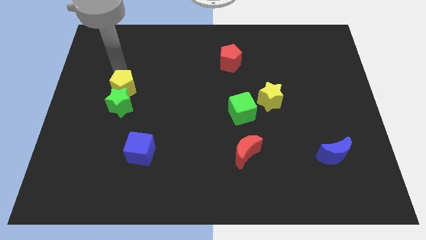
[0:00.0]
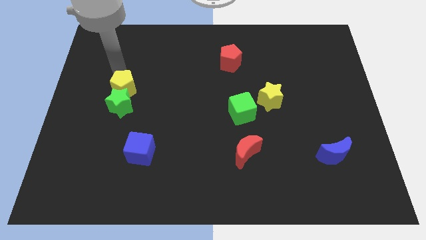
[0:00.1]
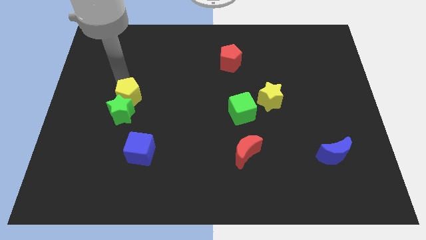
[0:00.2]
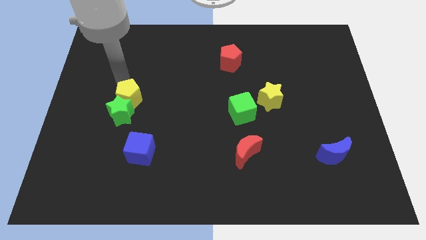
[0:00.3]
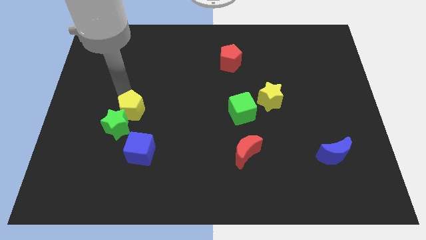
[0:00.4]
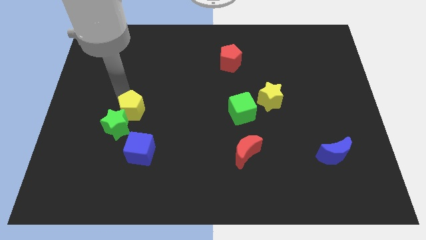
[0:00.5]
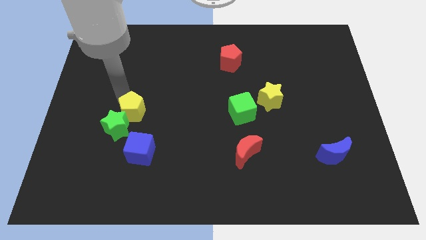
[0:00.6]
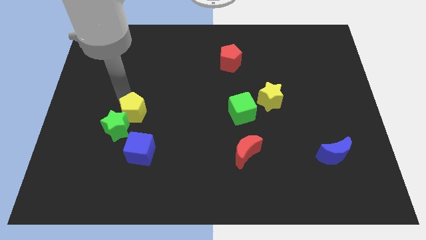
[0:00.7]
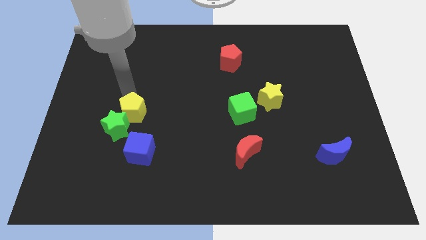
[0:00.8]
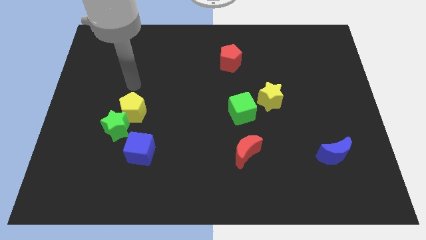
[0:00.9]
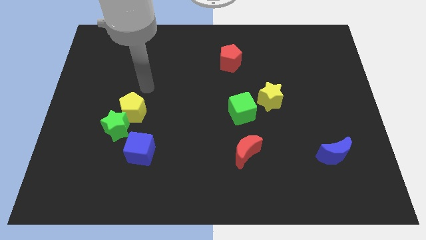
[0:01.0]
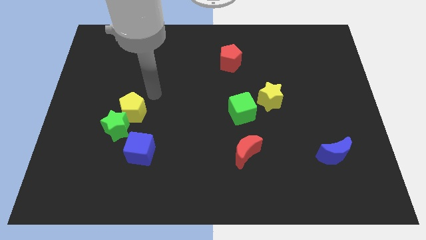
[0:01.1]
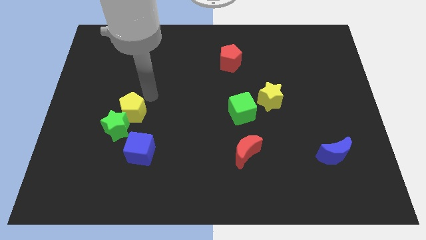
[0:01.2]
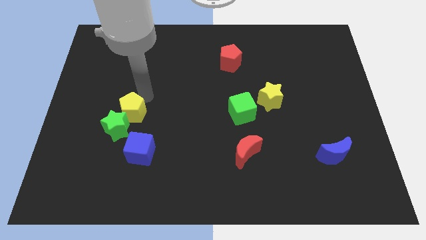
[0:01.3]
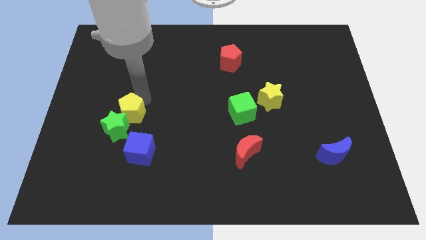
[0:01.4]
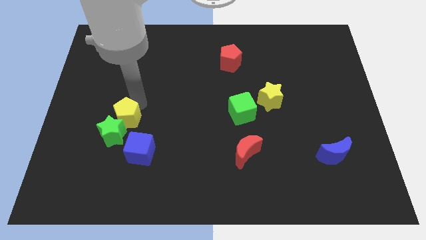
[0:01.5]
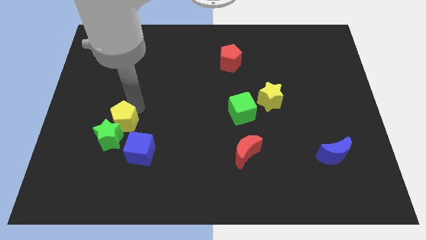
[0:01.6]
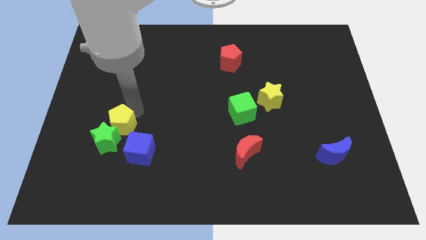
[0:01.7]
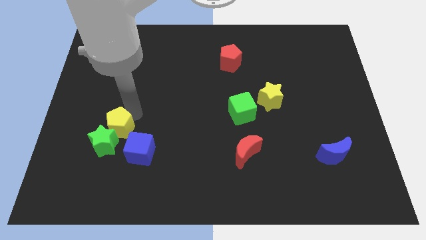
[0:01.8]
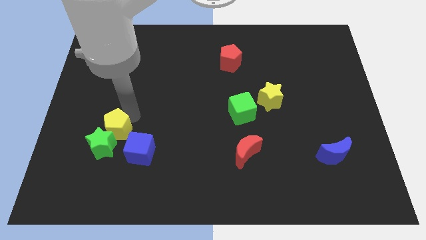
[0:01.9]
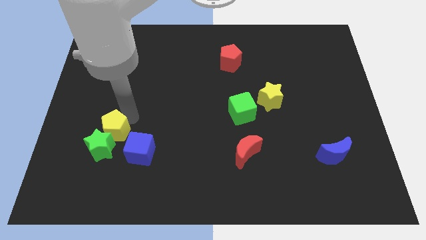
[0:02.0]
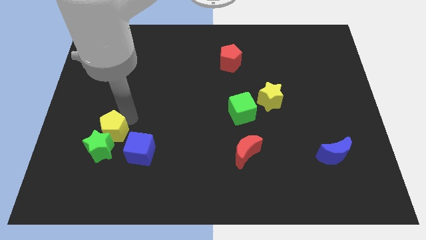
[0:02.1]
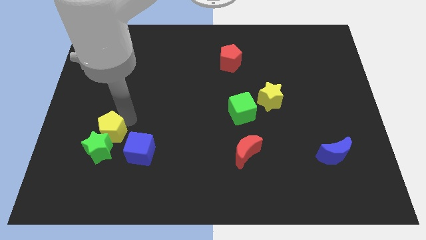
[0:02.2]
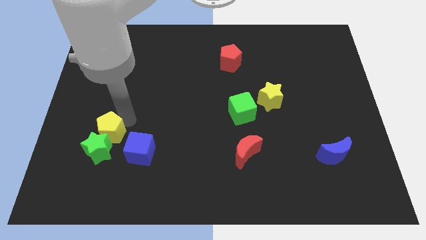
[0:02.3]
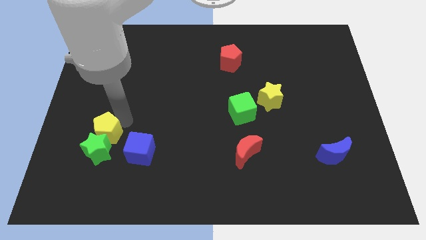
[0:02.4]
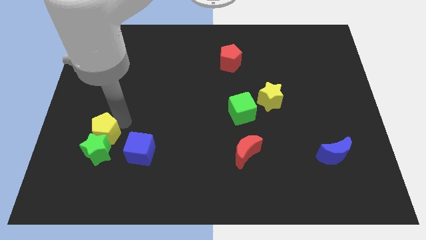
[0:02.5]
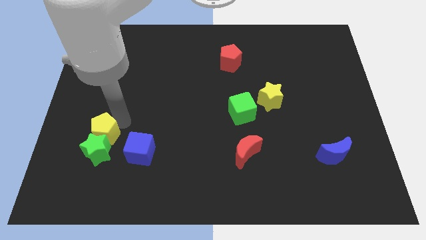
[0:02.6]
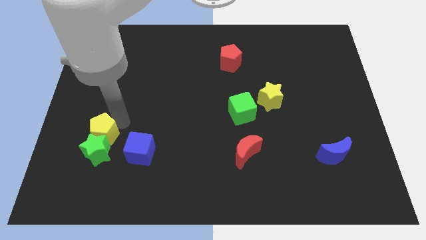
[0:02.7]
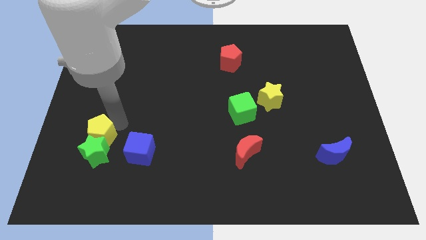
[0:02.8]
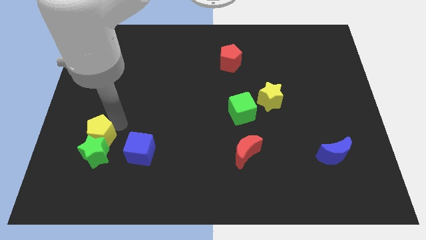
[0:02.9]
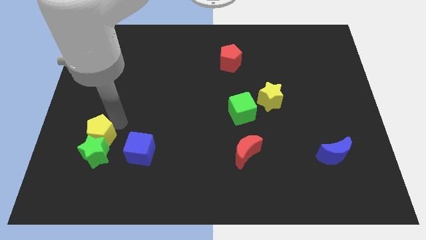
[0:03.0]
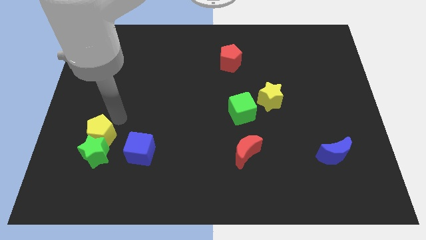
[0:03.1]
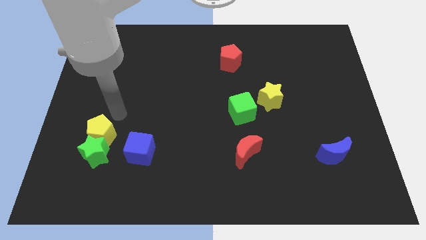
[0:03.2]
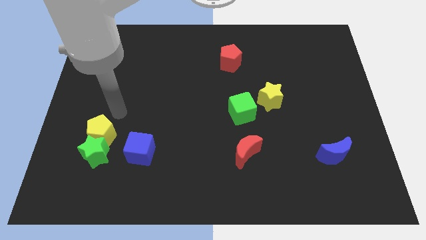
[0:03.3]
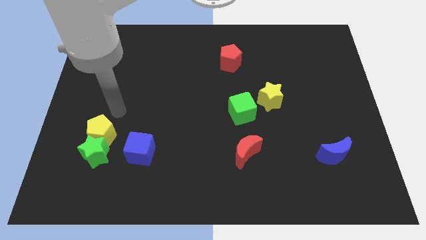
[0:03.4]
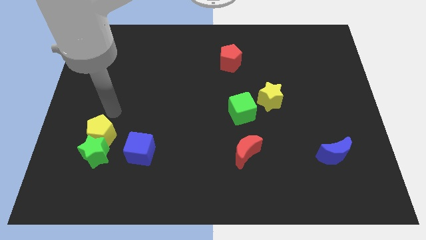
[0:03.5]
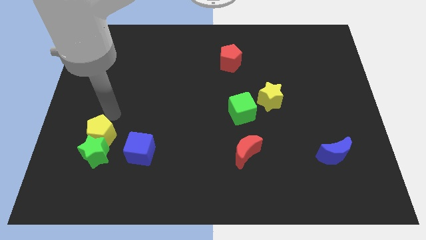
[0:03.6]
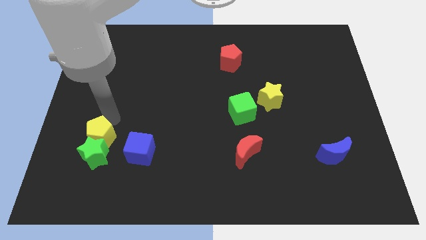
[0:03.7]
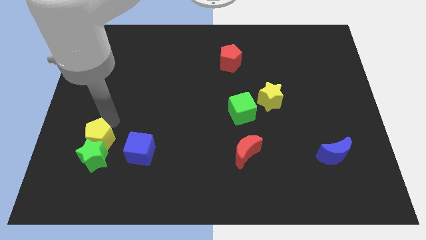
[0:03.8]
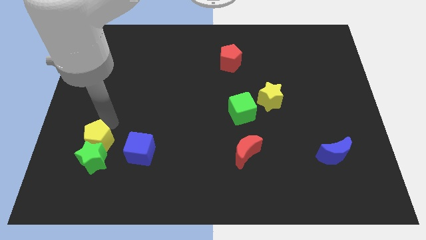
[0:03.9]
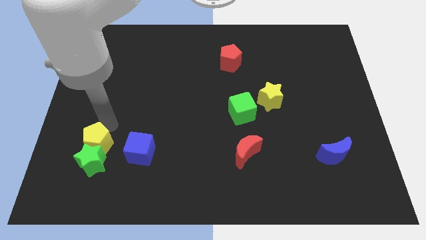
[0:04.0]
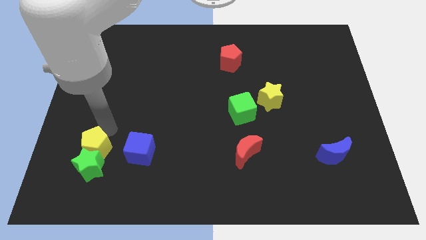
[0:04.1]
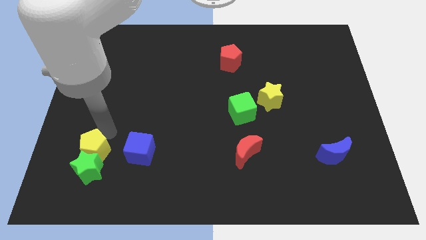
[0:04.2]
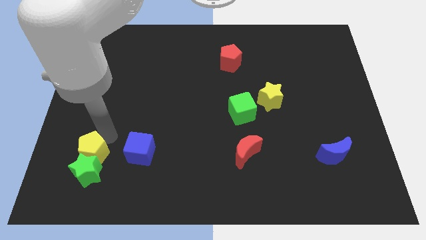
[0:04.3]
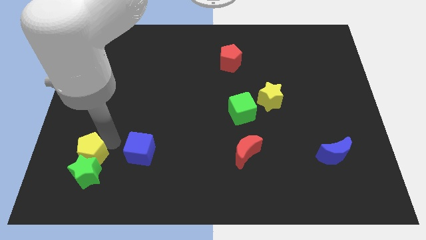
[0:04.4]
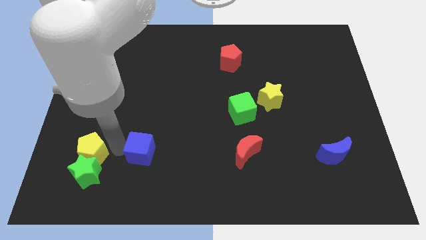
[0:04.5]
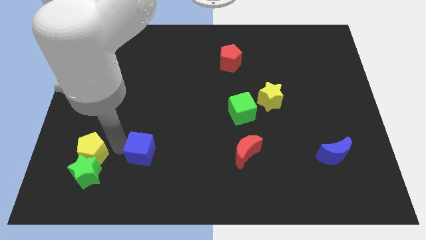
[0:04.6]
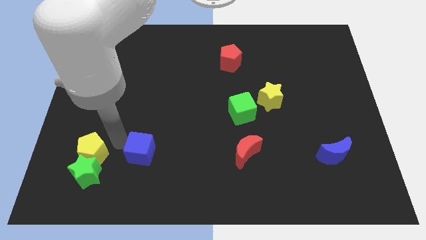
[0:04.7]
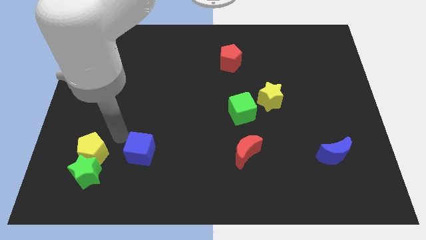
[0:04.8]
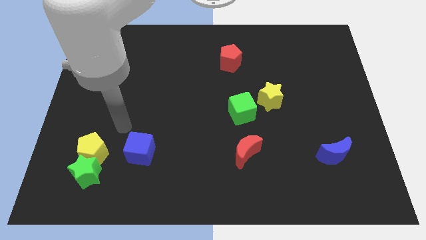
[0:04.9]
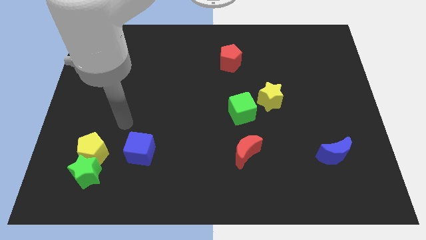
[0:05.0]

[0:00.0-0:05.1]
move yellow pentagon and green star towards bottom left

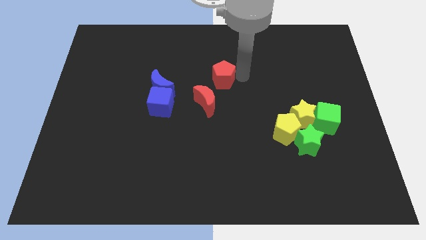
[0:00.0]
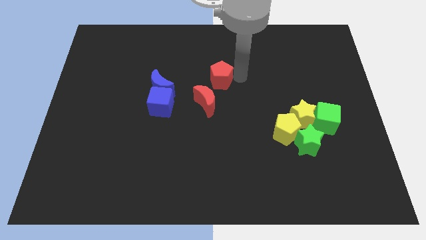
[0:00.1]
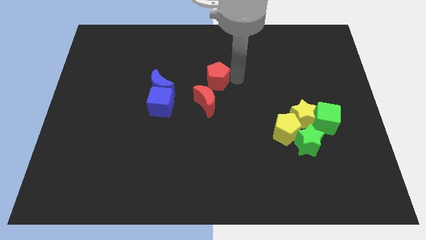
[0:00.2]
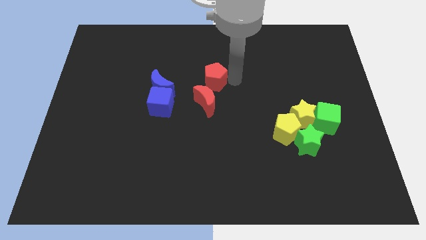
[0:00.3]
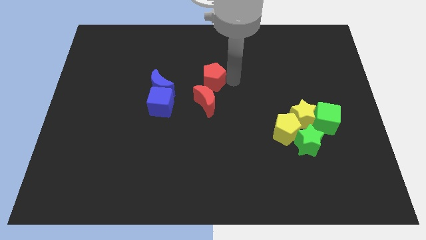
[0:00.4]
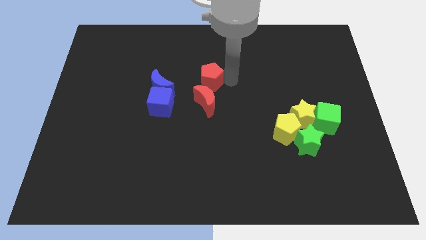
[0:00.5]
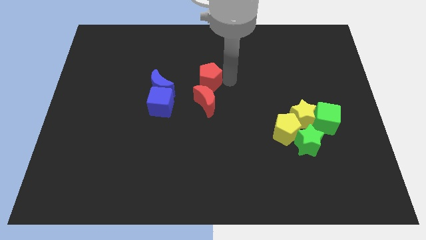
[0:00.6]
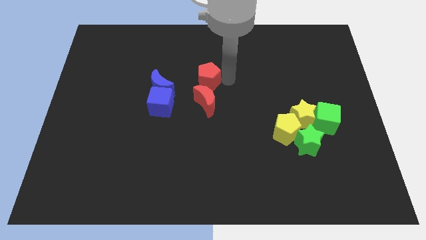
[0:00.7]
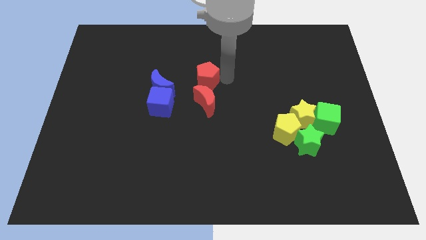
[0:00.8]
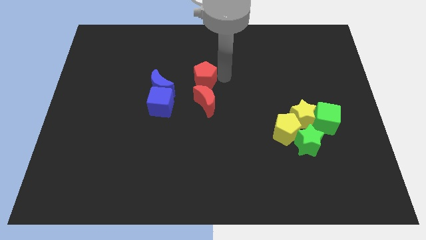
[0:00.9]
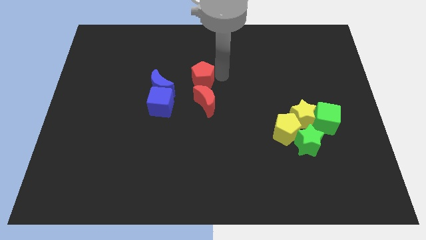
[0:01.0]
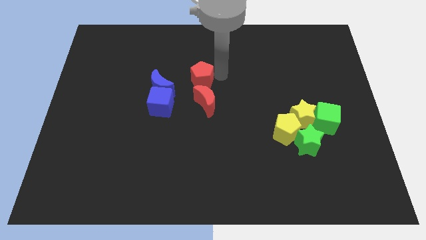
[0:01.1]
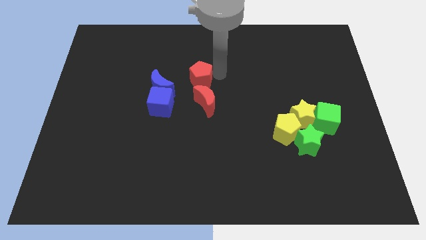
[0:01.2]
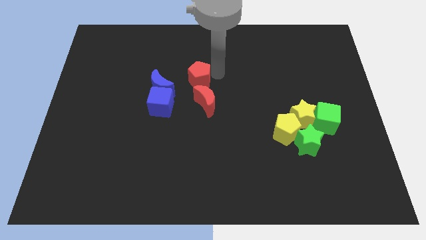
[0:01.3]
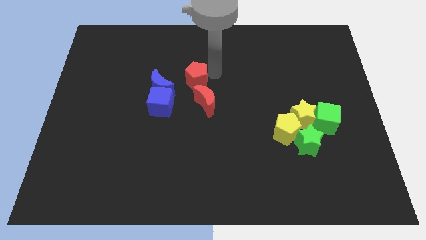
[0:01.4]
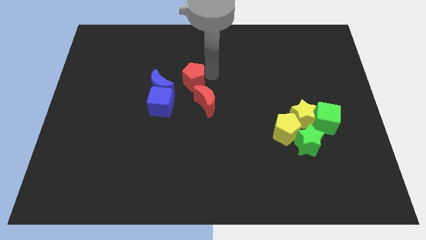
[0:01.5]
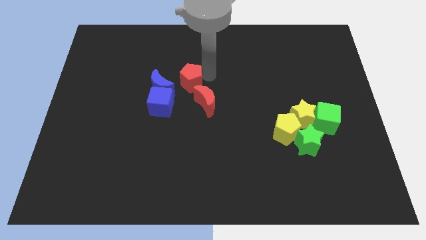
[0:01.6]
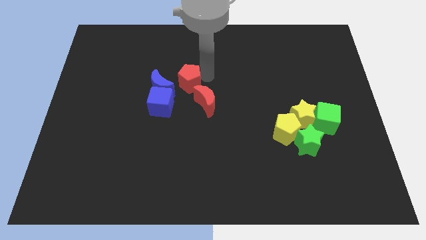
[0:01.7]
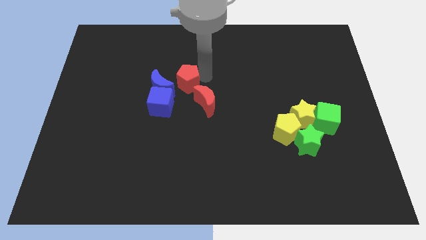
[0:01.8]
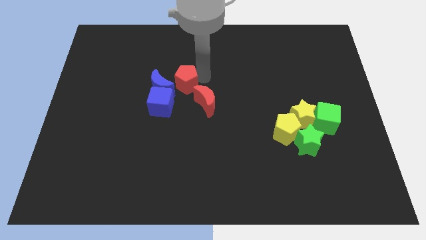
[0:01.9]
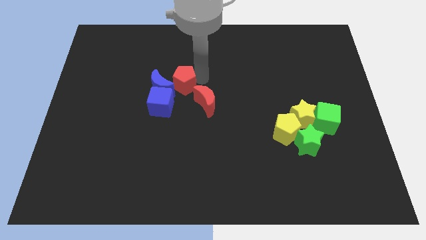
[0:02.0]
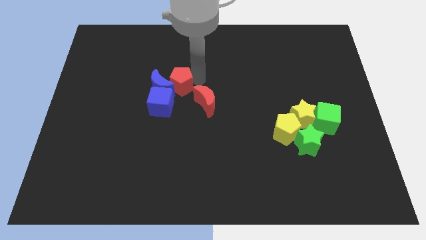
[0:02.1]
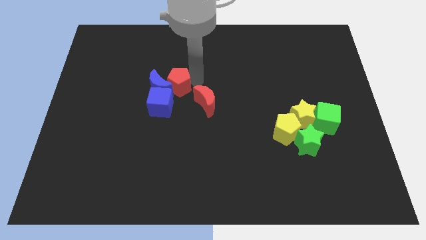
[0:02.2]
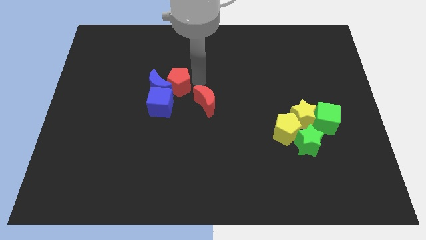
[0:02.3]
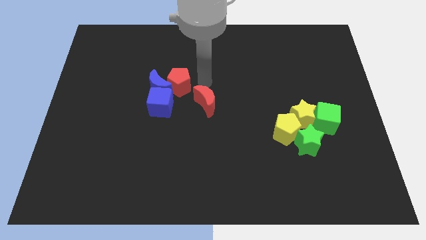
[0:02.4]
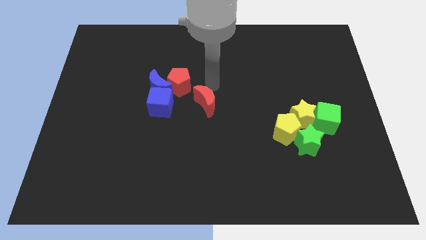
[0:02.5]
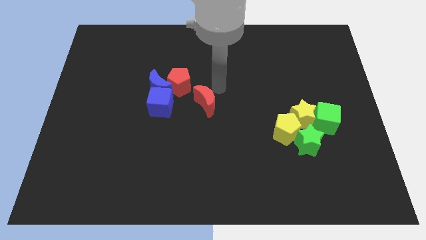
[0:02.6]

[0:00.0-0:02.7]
push the red pentagon towards the blue blocks

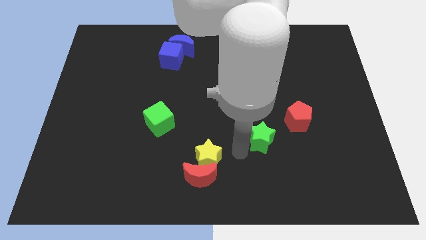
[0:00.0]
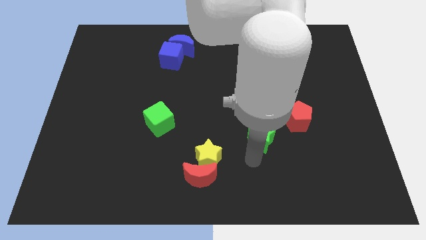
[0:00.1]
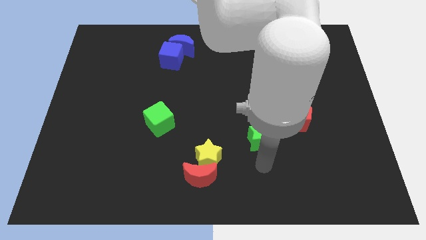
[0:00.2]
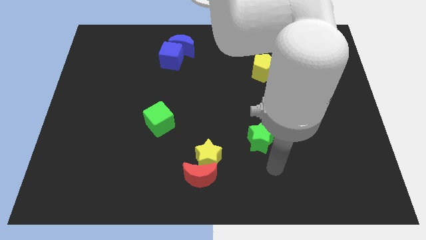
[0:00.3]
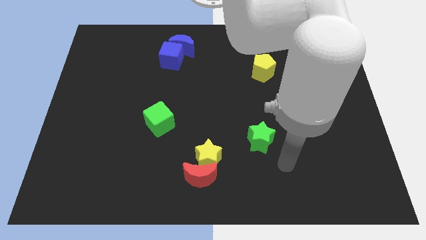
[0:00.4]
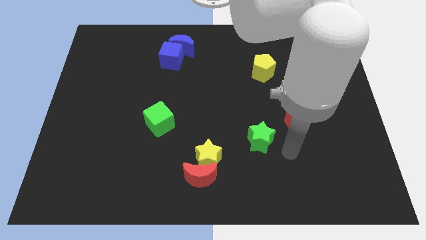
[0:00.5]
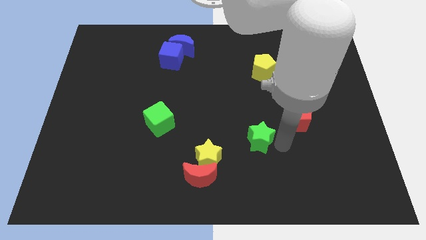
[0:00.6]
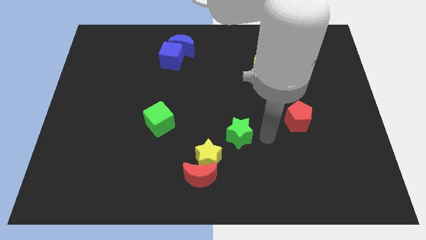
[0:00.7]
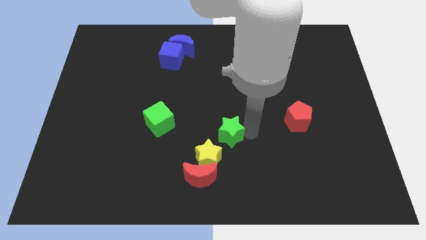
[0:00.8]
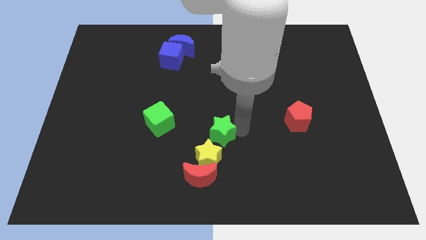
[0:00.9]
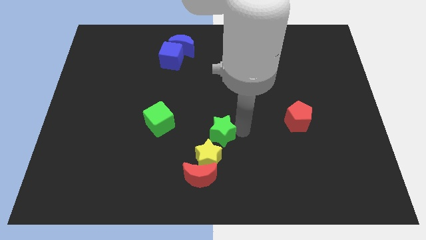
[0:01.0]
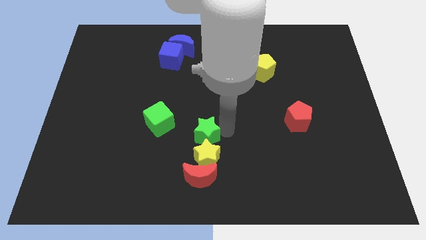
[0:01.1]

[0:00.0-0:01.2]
move the green star vertically above the yellow star

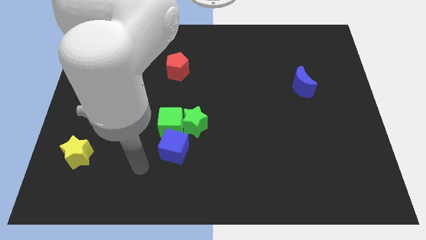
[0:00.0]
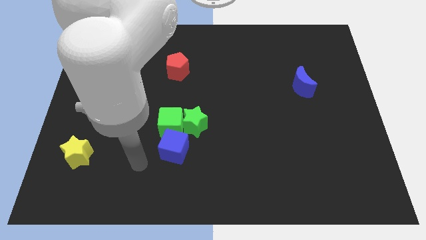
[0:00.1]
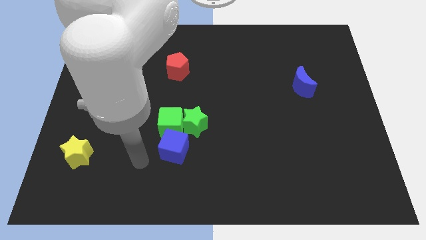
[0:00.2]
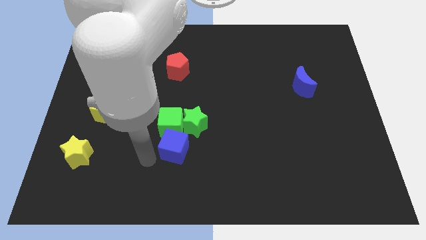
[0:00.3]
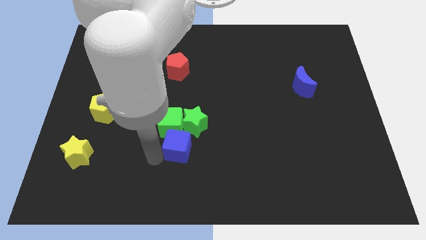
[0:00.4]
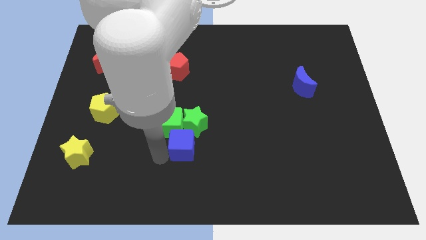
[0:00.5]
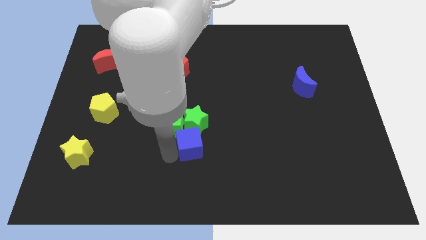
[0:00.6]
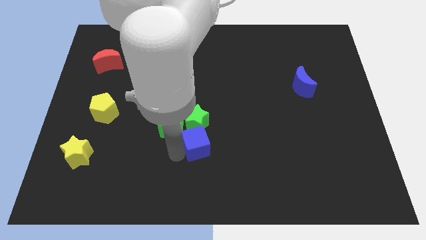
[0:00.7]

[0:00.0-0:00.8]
place blue cube at the bottom of green star
